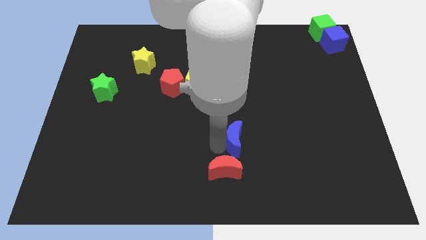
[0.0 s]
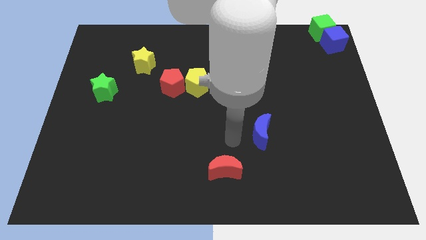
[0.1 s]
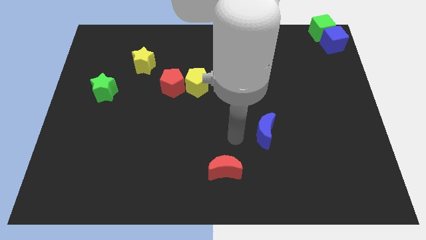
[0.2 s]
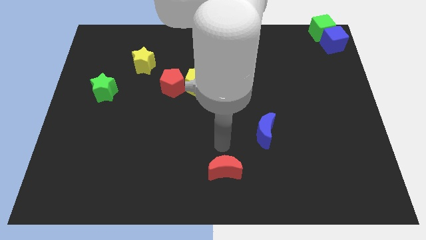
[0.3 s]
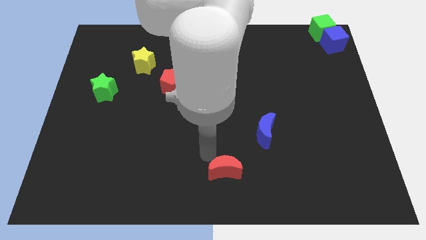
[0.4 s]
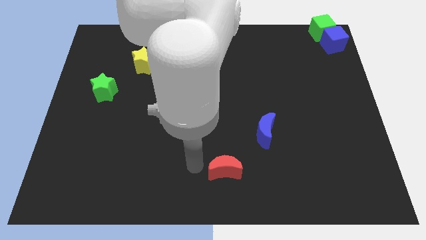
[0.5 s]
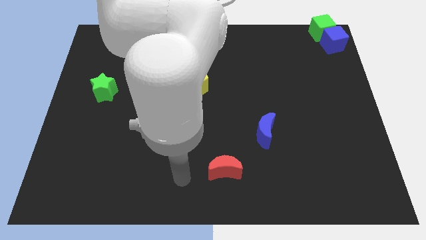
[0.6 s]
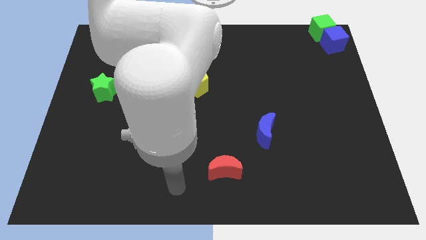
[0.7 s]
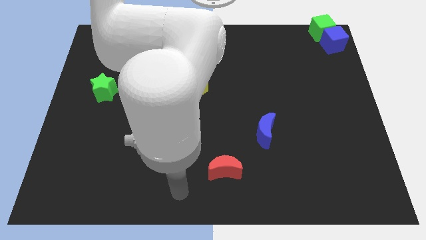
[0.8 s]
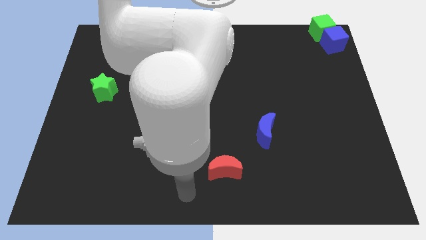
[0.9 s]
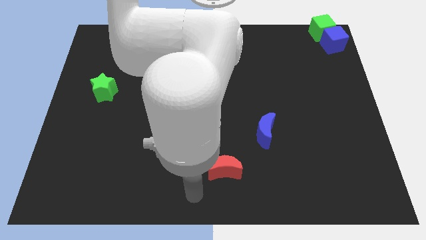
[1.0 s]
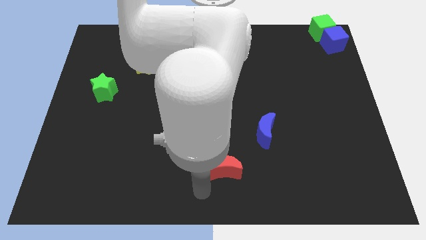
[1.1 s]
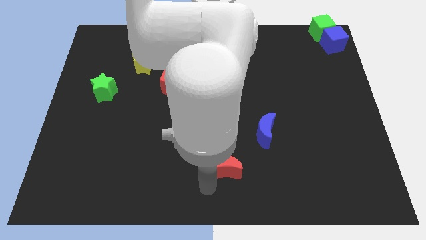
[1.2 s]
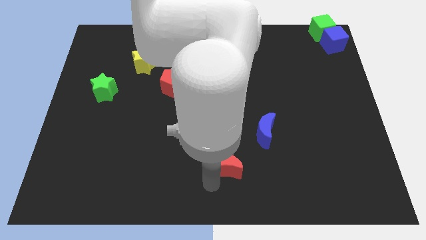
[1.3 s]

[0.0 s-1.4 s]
push the blue crescent slightly to the right

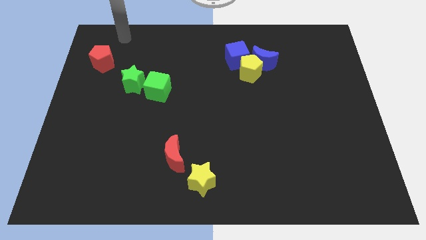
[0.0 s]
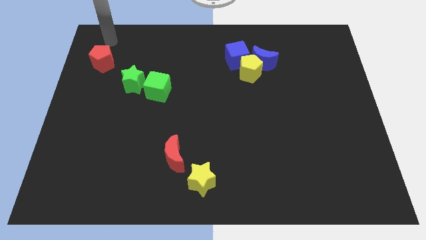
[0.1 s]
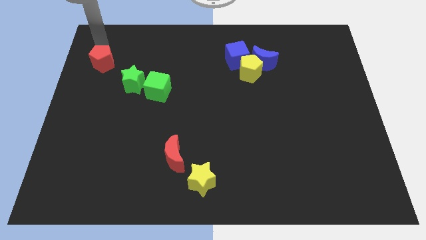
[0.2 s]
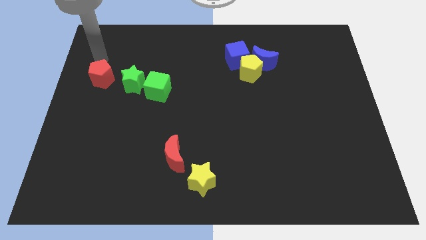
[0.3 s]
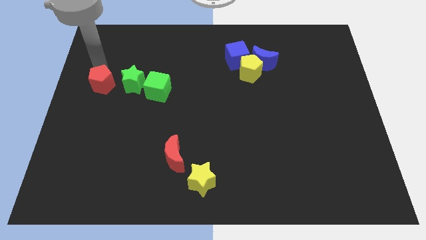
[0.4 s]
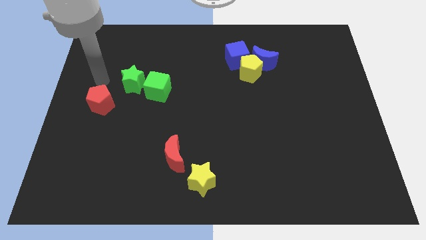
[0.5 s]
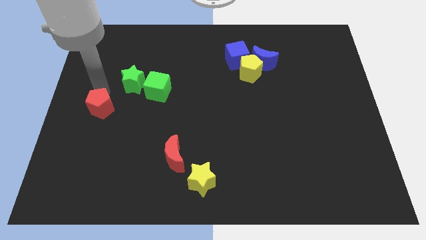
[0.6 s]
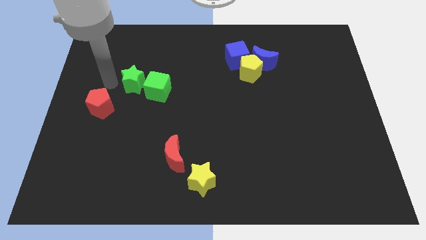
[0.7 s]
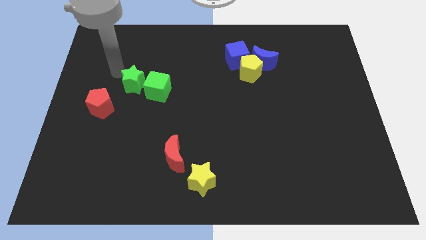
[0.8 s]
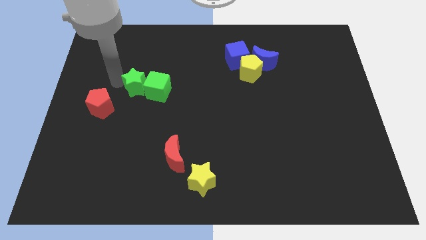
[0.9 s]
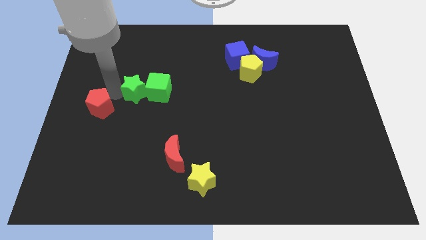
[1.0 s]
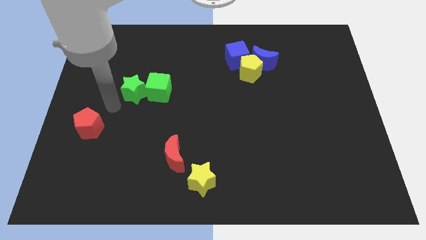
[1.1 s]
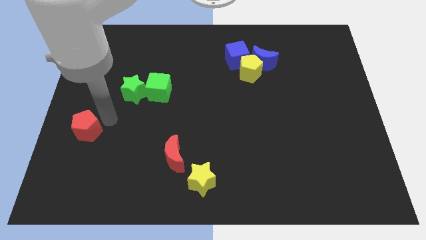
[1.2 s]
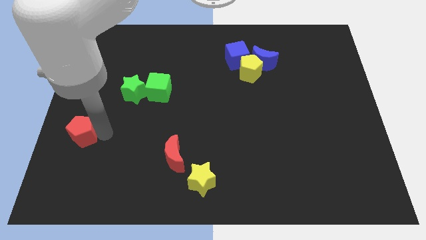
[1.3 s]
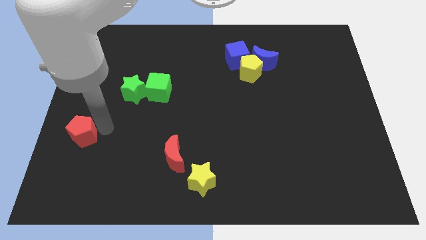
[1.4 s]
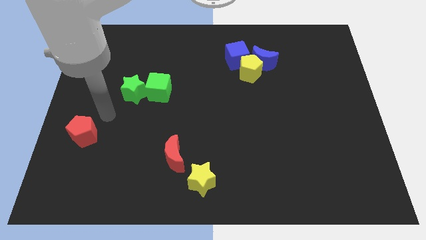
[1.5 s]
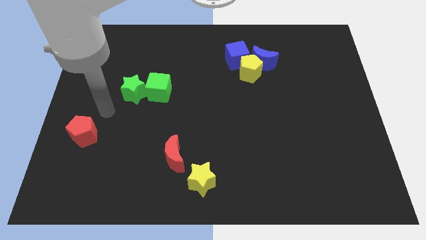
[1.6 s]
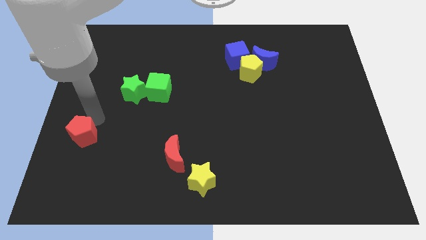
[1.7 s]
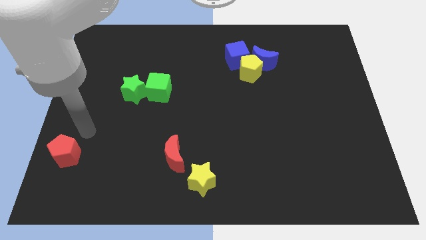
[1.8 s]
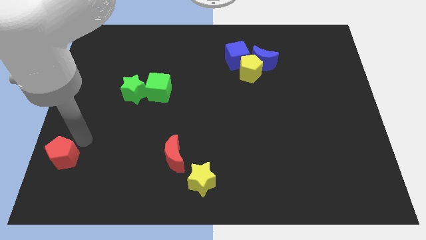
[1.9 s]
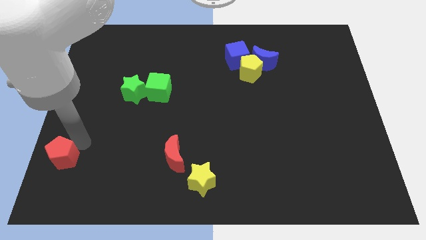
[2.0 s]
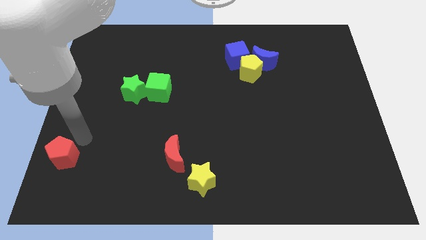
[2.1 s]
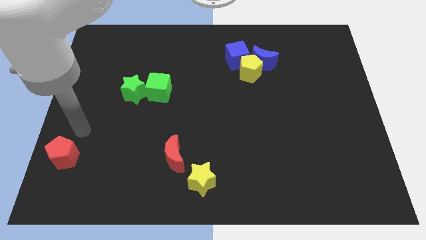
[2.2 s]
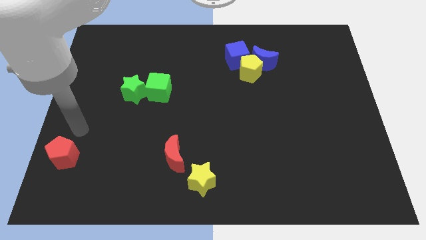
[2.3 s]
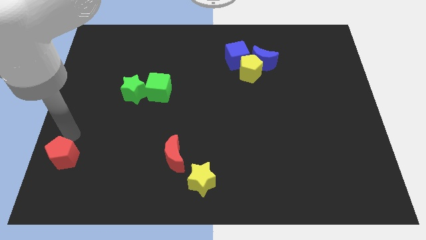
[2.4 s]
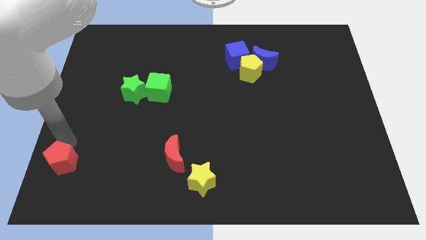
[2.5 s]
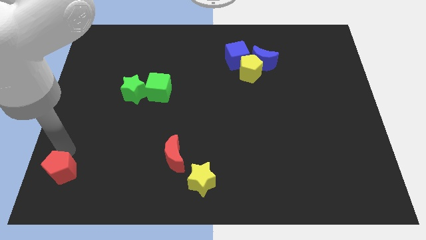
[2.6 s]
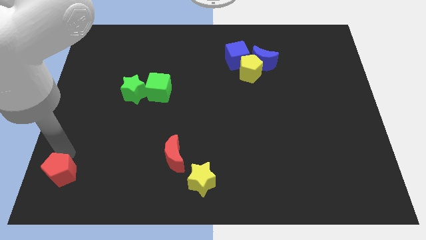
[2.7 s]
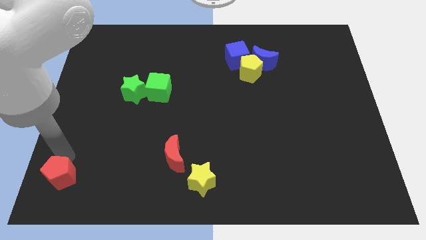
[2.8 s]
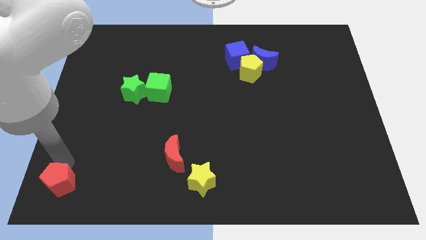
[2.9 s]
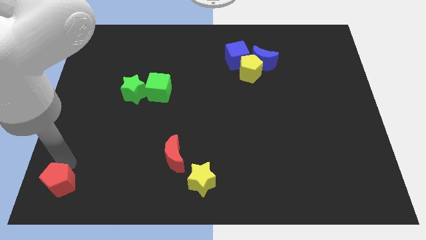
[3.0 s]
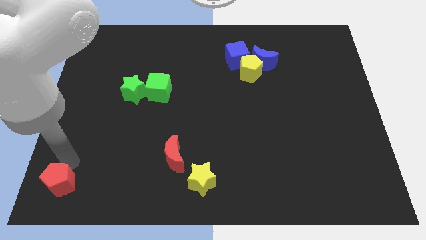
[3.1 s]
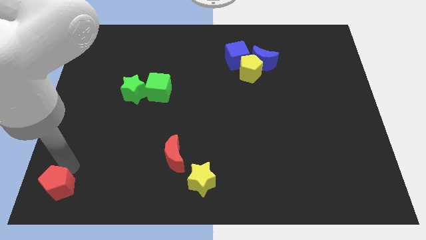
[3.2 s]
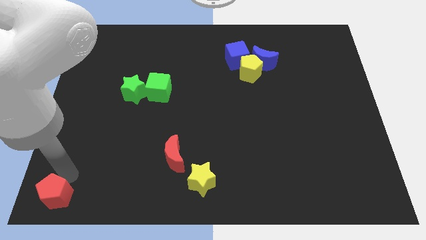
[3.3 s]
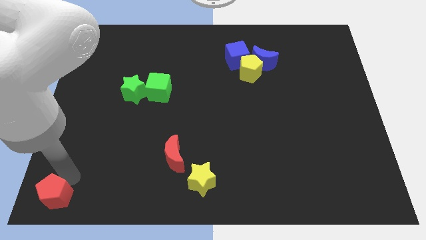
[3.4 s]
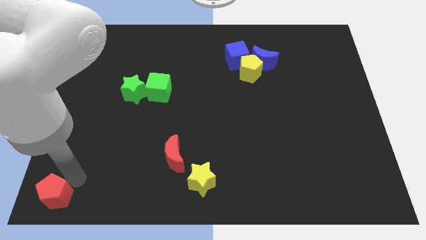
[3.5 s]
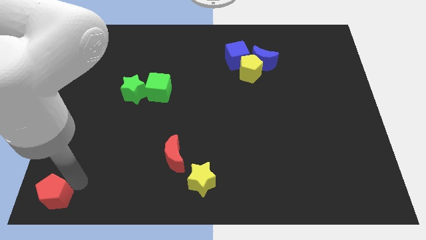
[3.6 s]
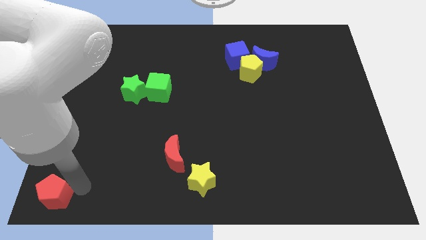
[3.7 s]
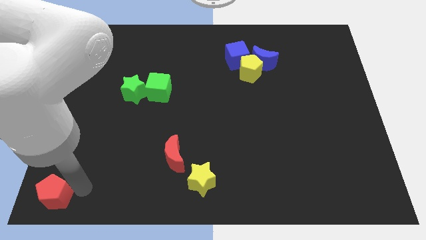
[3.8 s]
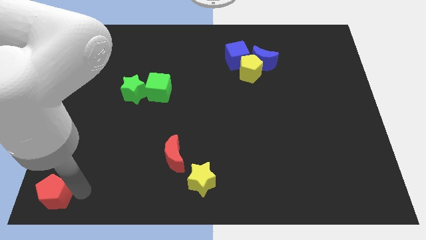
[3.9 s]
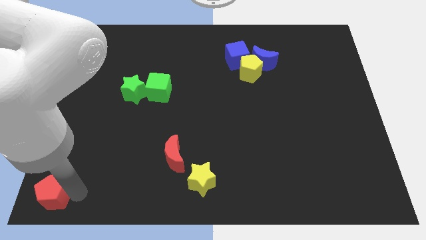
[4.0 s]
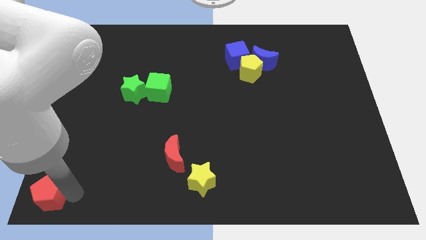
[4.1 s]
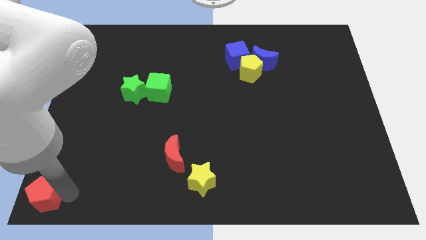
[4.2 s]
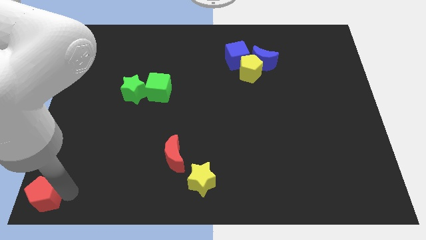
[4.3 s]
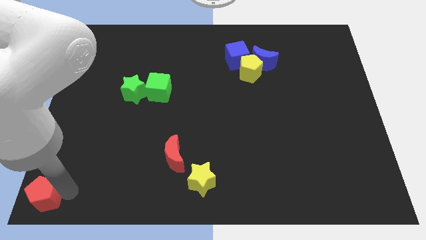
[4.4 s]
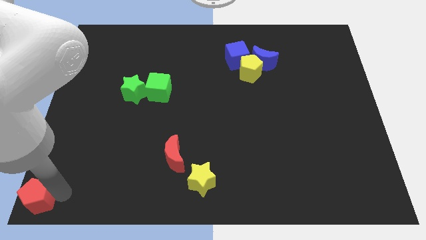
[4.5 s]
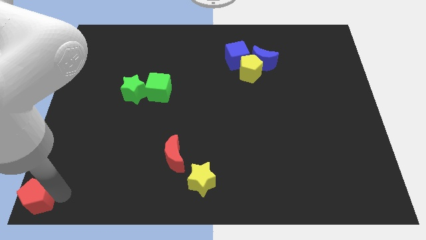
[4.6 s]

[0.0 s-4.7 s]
move the red pentagon to the bottom left corner of the board

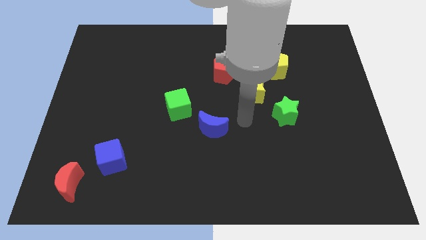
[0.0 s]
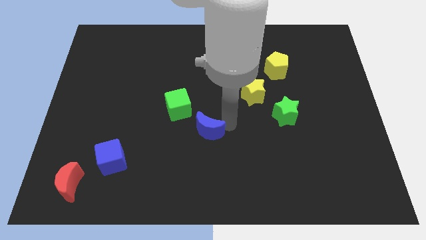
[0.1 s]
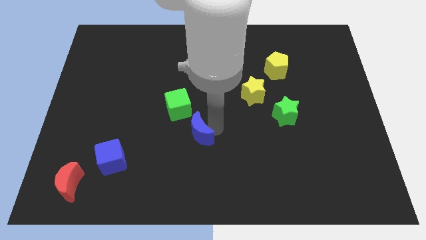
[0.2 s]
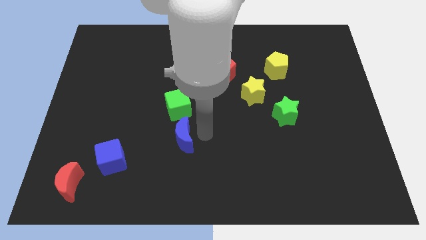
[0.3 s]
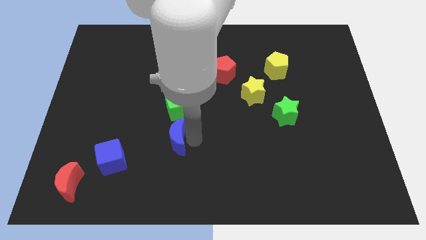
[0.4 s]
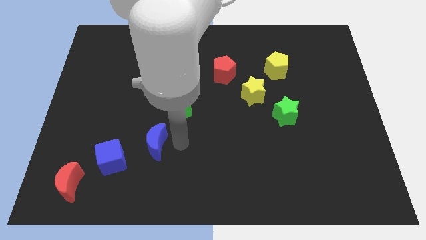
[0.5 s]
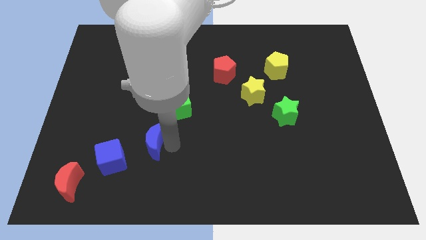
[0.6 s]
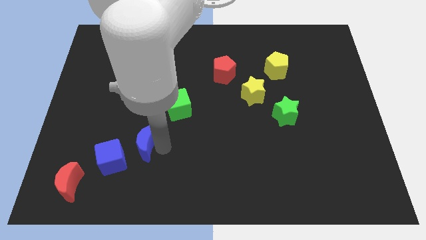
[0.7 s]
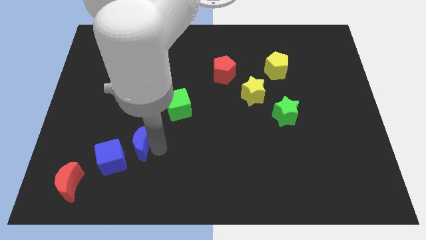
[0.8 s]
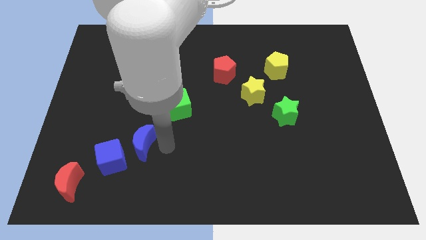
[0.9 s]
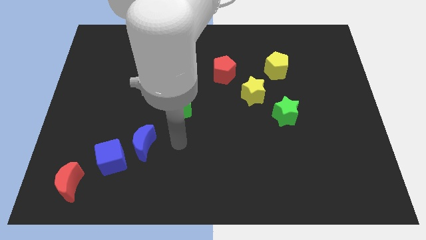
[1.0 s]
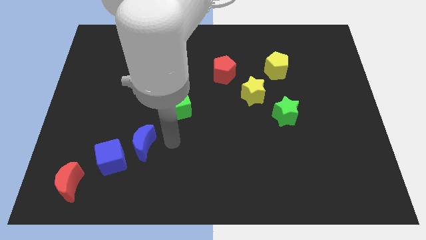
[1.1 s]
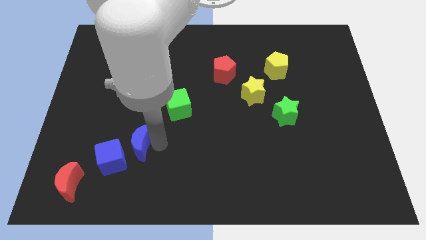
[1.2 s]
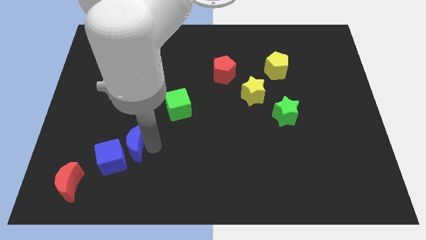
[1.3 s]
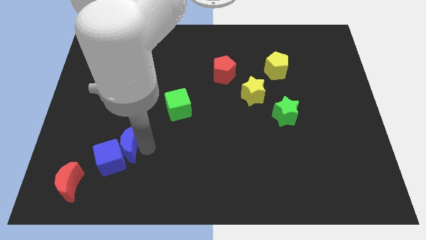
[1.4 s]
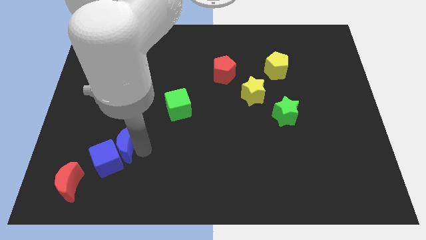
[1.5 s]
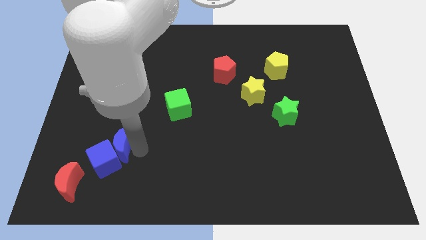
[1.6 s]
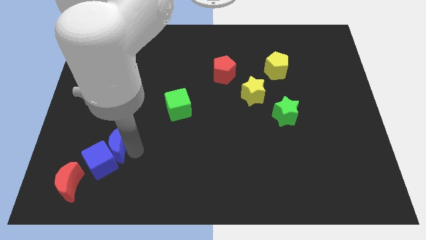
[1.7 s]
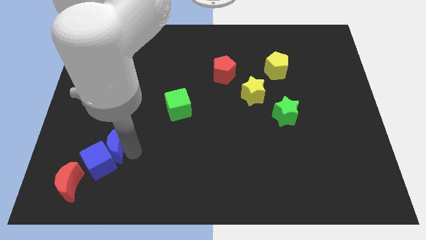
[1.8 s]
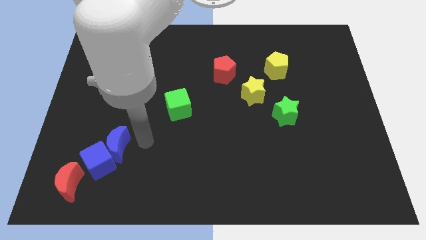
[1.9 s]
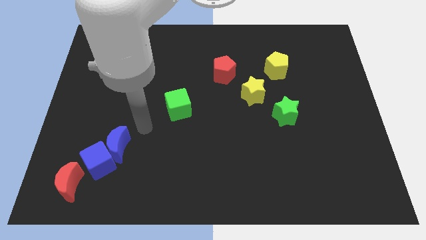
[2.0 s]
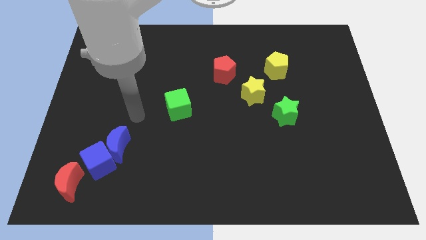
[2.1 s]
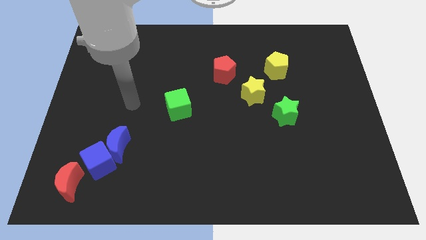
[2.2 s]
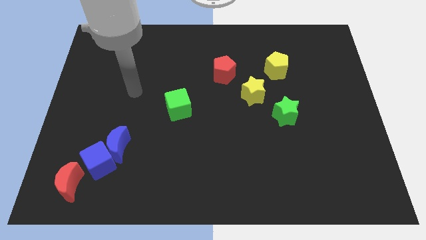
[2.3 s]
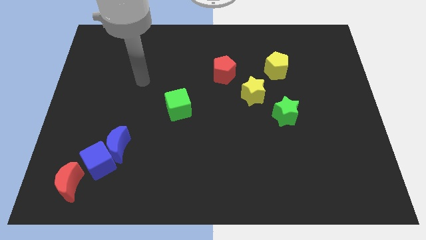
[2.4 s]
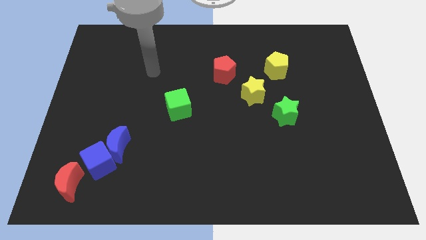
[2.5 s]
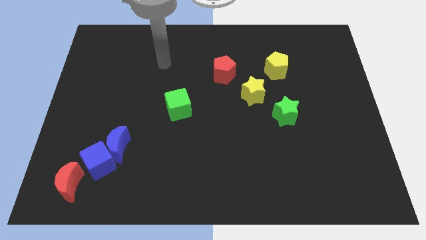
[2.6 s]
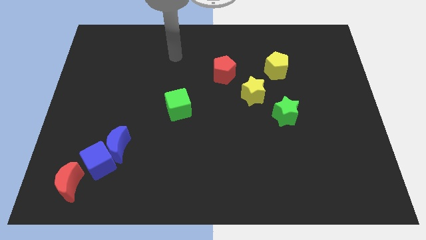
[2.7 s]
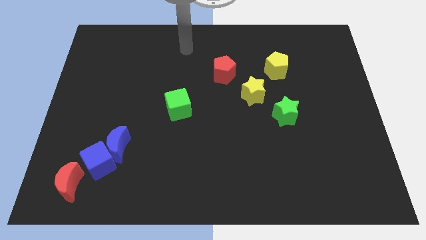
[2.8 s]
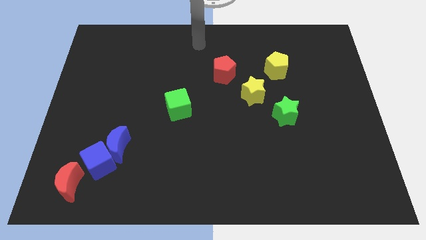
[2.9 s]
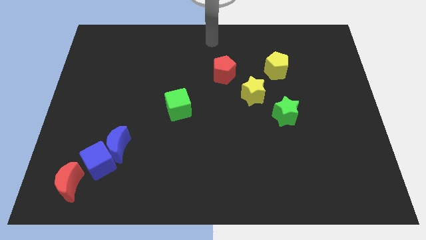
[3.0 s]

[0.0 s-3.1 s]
push the blue crescent into the blue cube and go away
